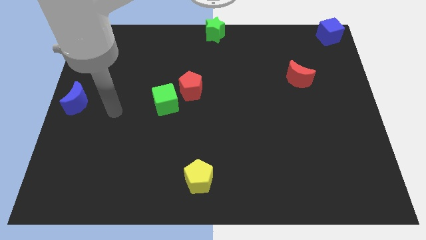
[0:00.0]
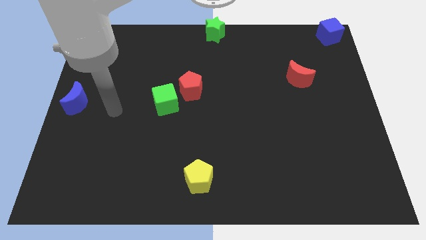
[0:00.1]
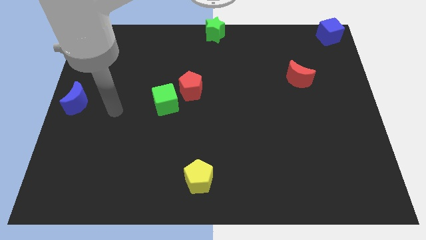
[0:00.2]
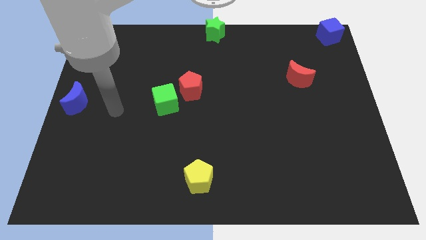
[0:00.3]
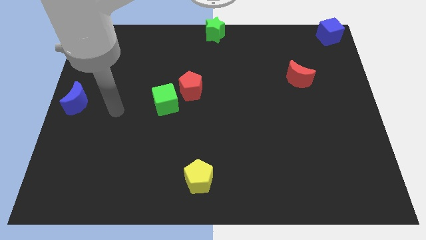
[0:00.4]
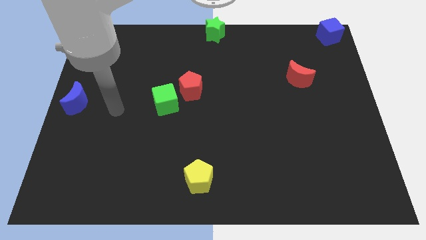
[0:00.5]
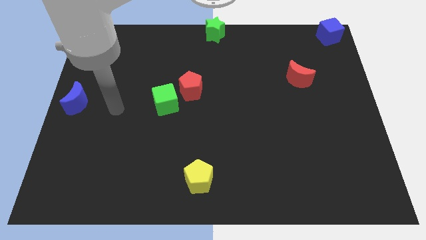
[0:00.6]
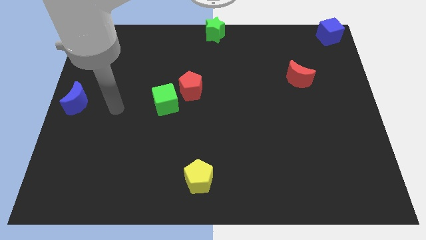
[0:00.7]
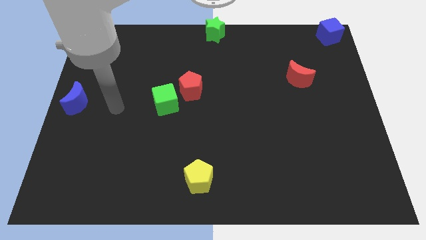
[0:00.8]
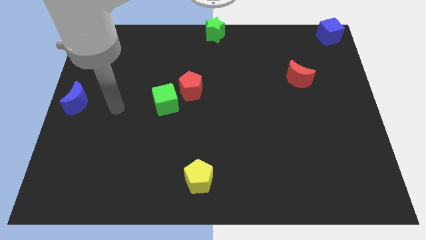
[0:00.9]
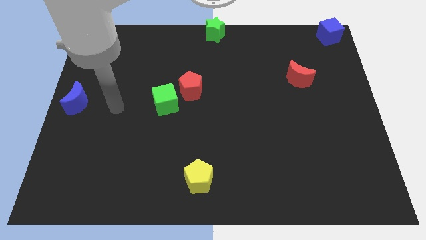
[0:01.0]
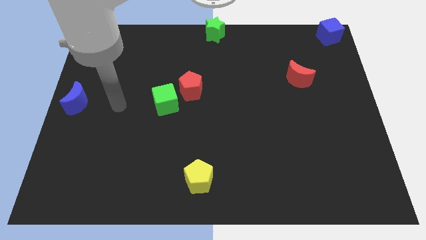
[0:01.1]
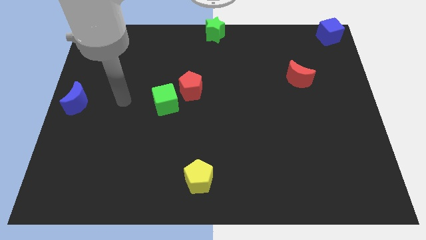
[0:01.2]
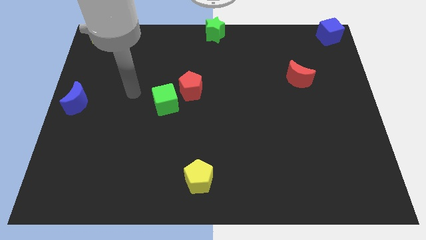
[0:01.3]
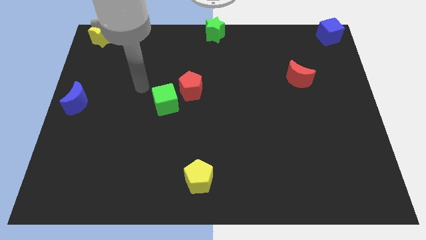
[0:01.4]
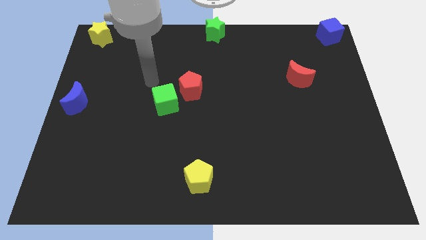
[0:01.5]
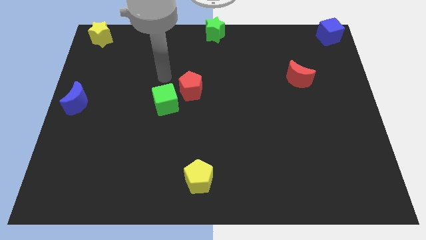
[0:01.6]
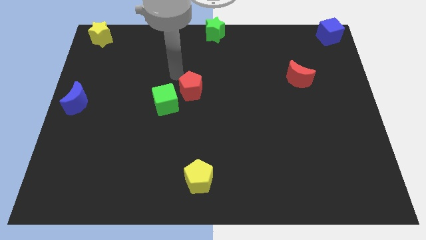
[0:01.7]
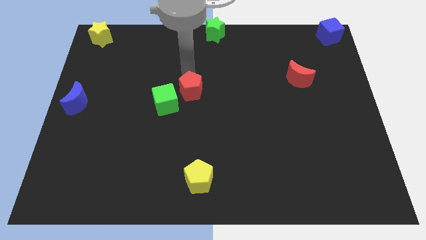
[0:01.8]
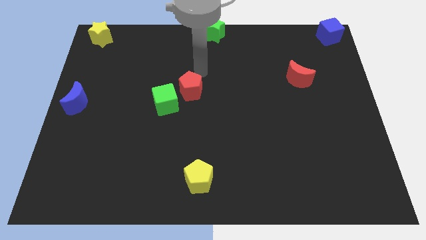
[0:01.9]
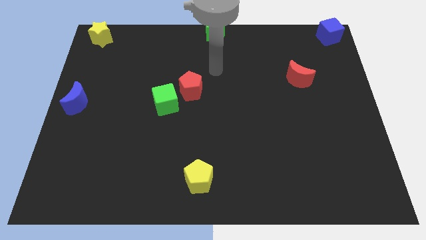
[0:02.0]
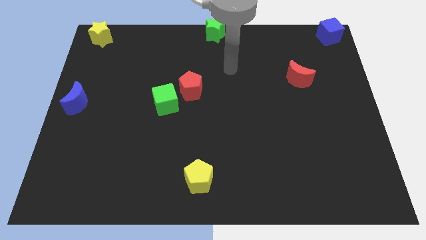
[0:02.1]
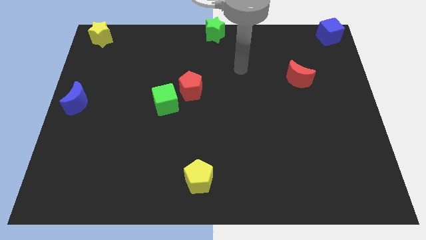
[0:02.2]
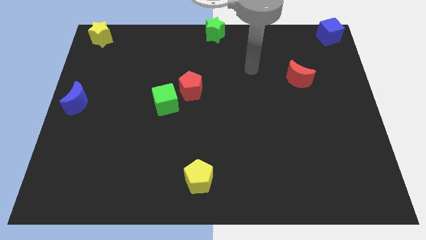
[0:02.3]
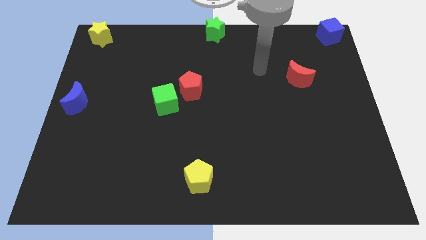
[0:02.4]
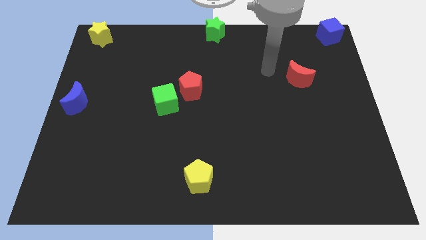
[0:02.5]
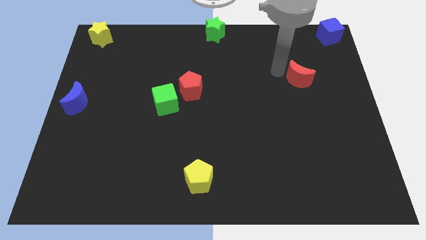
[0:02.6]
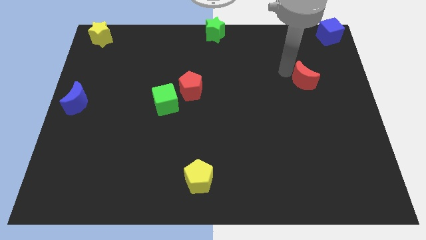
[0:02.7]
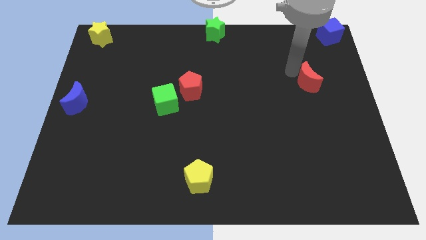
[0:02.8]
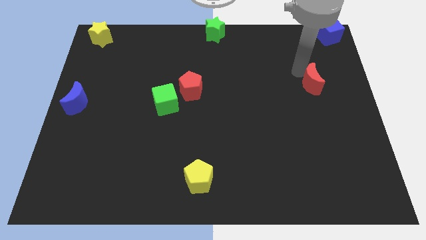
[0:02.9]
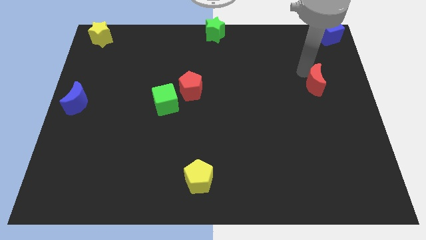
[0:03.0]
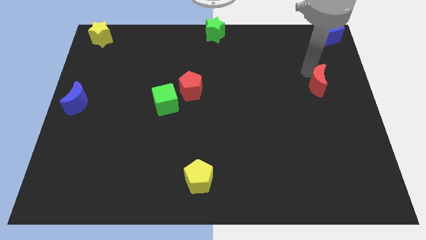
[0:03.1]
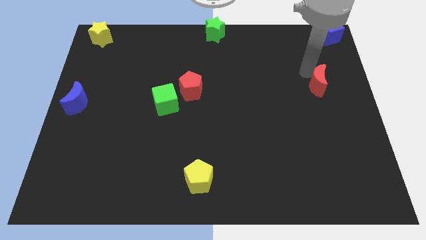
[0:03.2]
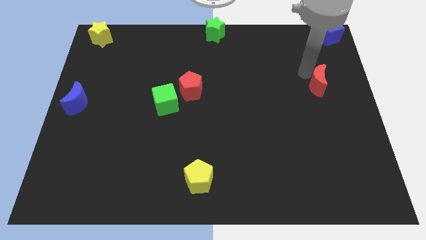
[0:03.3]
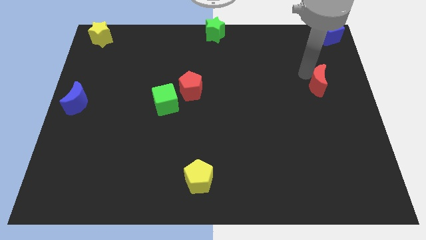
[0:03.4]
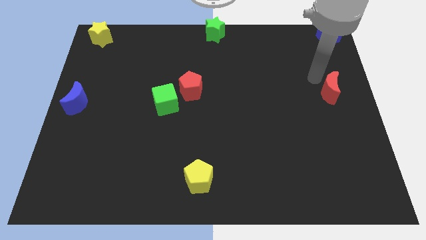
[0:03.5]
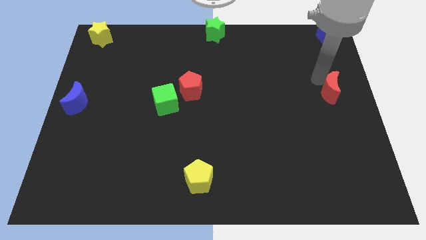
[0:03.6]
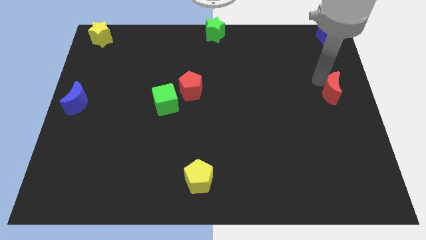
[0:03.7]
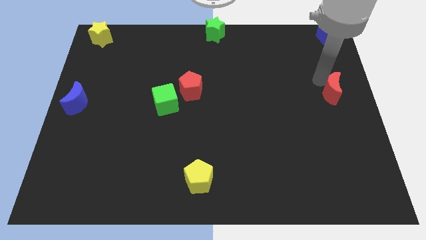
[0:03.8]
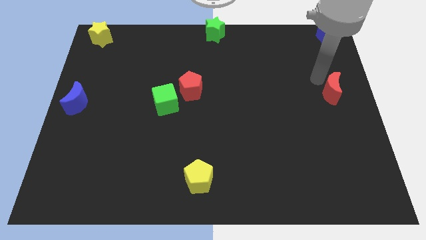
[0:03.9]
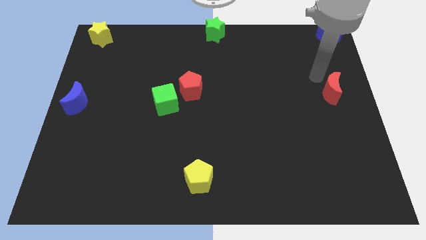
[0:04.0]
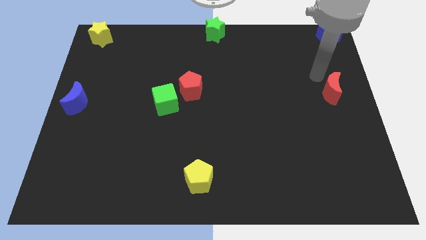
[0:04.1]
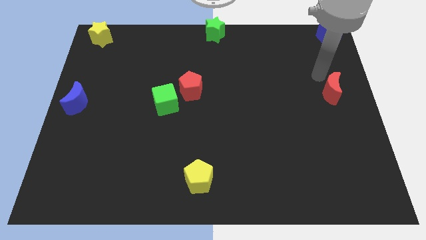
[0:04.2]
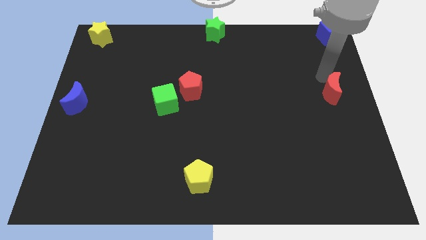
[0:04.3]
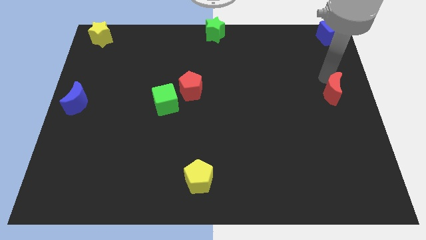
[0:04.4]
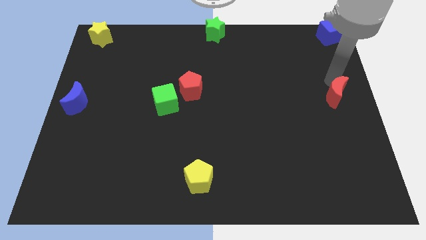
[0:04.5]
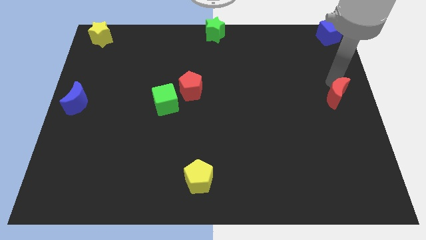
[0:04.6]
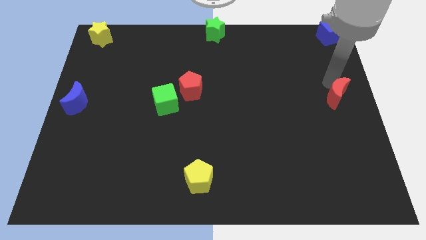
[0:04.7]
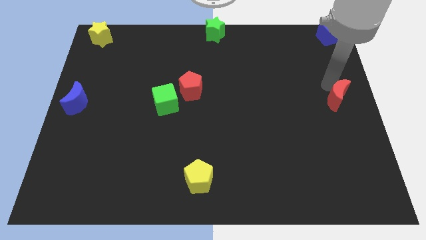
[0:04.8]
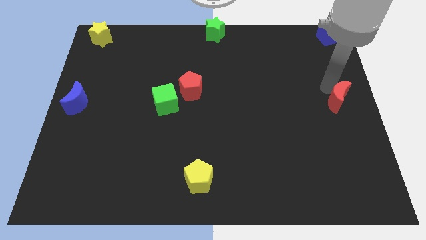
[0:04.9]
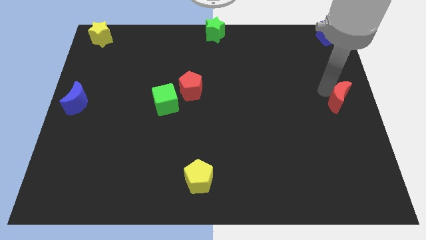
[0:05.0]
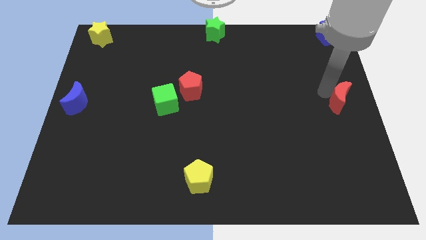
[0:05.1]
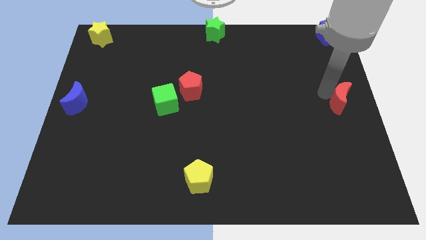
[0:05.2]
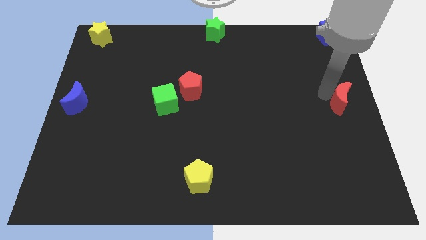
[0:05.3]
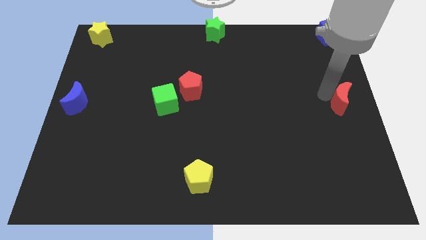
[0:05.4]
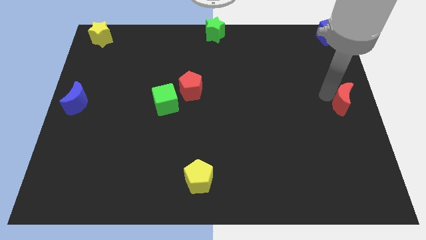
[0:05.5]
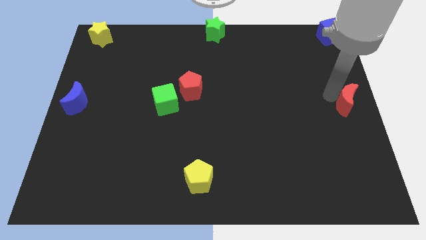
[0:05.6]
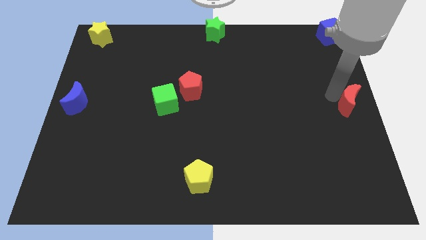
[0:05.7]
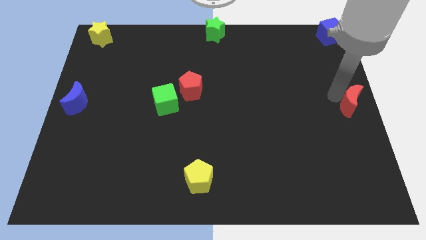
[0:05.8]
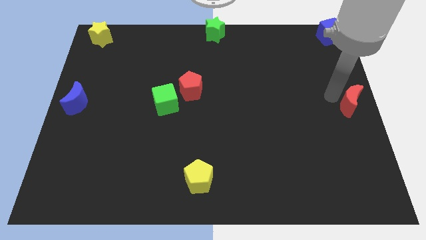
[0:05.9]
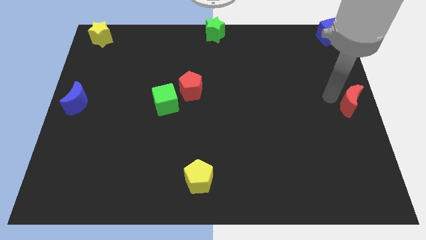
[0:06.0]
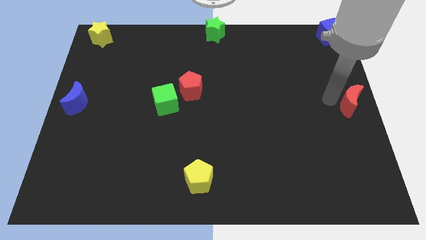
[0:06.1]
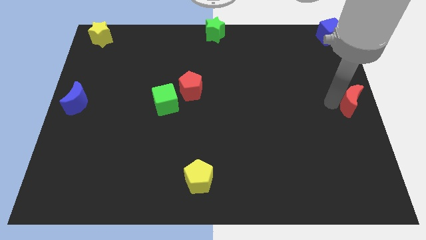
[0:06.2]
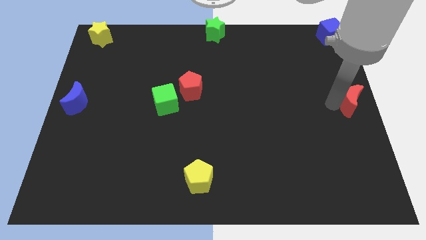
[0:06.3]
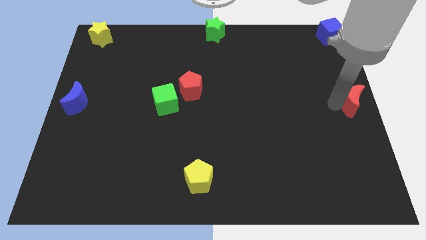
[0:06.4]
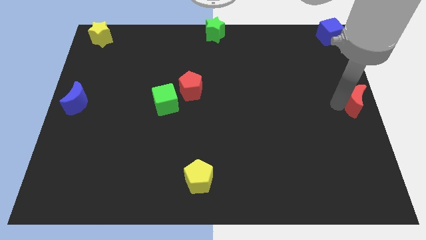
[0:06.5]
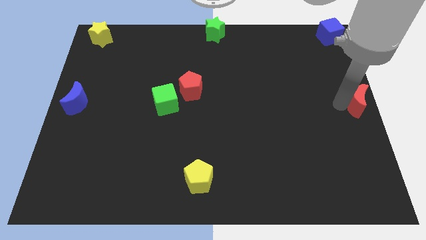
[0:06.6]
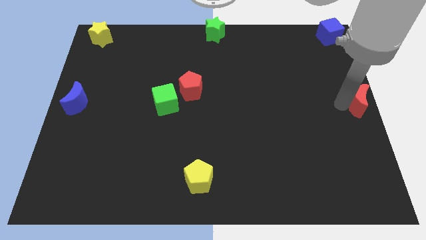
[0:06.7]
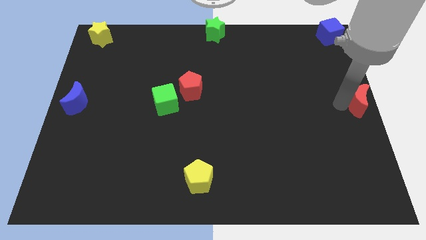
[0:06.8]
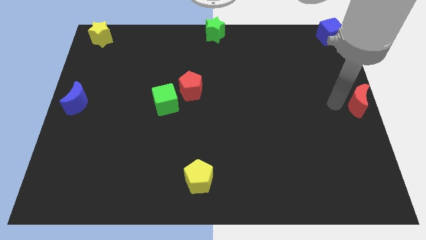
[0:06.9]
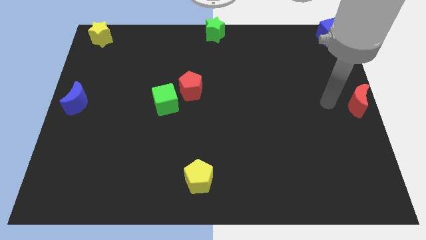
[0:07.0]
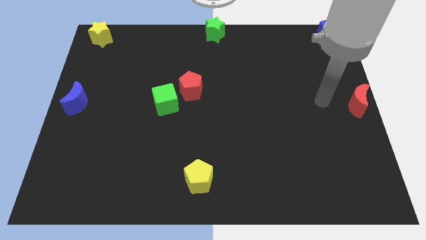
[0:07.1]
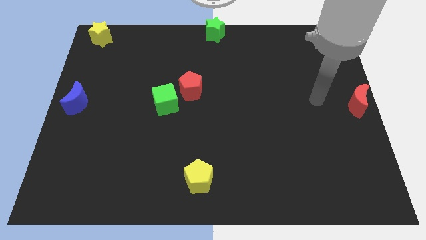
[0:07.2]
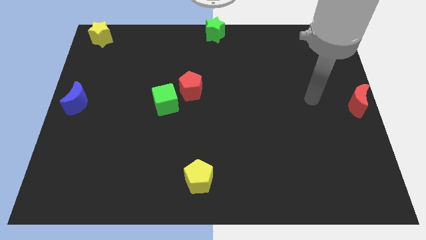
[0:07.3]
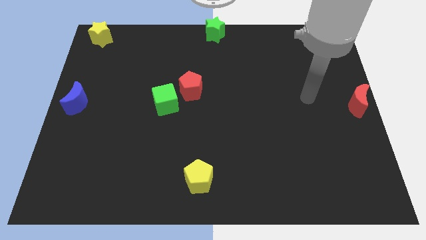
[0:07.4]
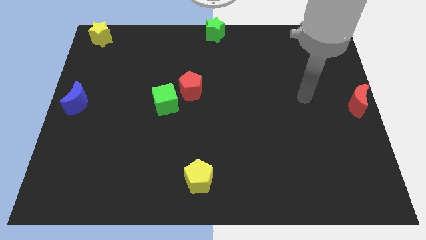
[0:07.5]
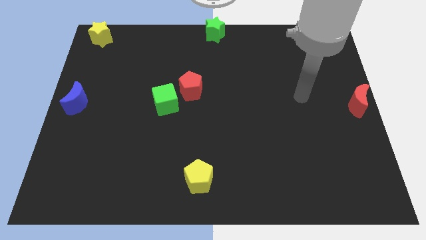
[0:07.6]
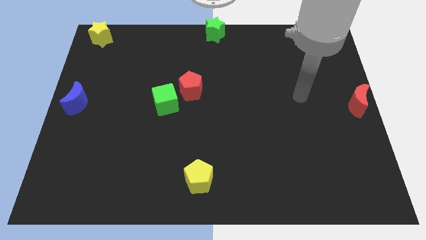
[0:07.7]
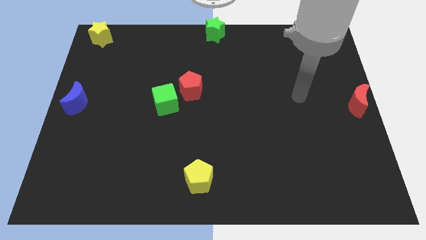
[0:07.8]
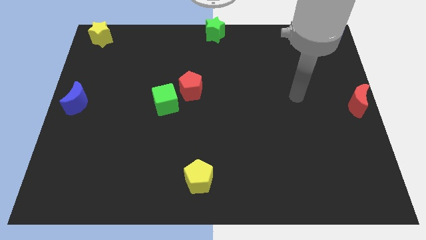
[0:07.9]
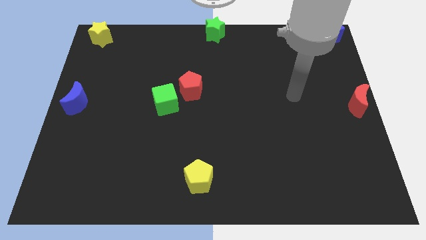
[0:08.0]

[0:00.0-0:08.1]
move red moon to the center right

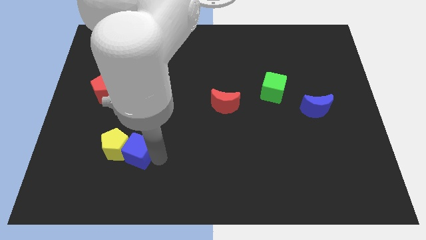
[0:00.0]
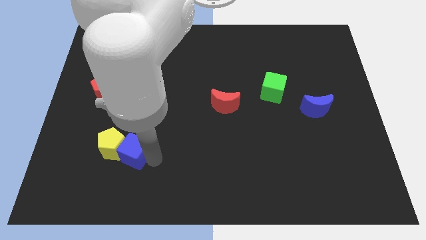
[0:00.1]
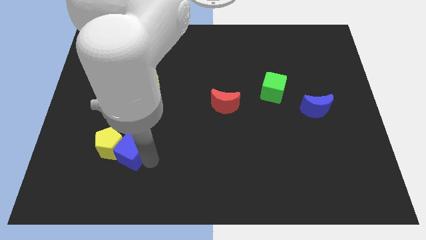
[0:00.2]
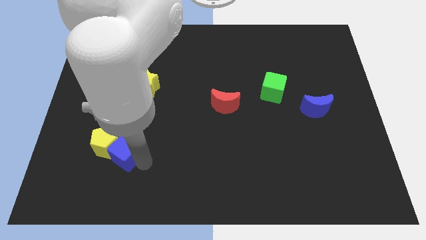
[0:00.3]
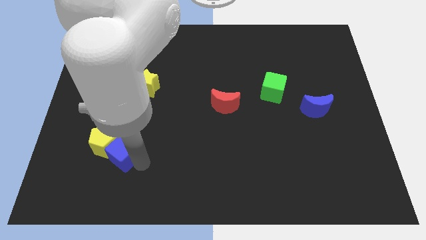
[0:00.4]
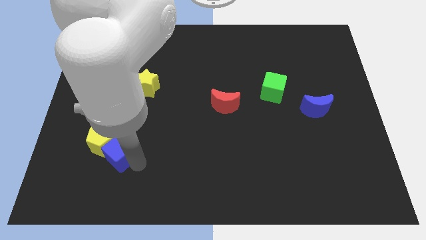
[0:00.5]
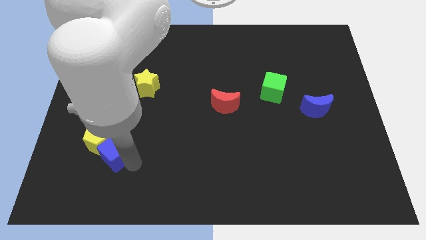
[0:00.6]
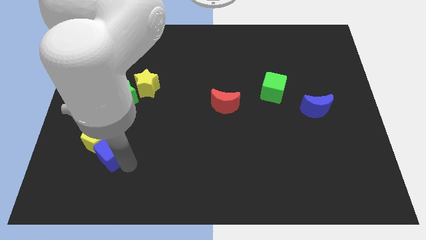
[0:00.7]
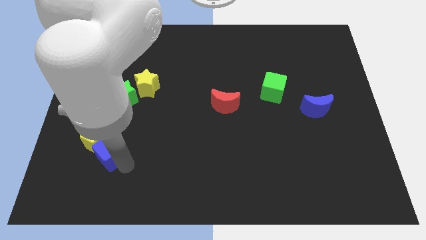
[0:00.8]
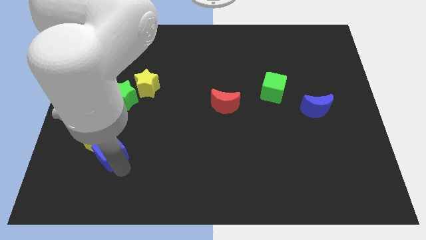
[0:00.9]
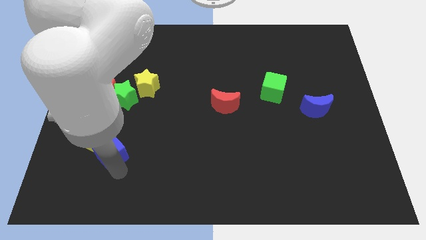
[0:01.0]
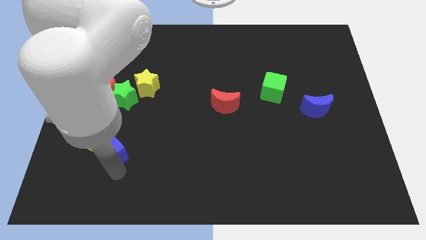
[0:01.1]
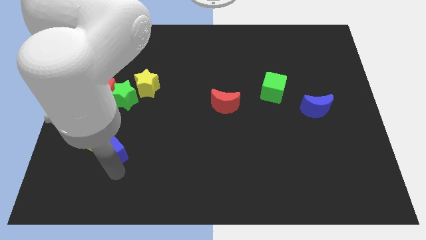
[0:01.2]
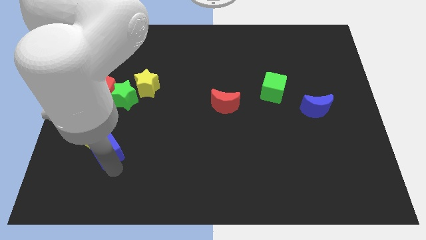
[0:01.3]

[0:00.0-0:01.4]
push the blue cube along with the yellow pentagon to the top
